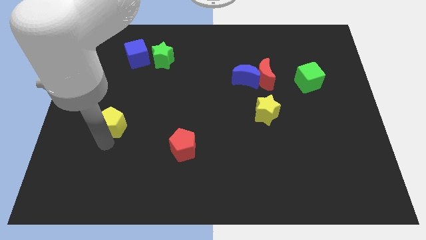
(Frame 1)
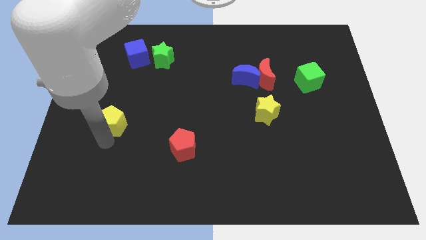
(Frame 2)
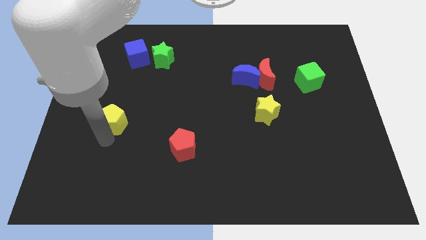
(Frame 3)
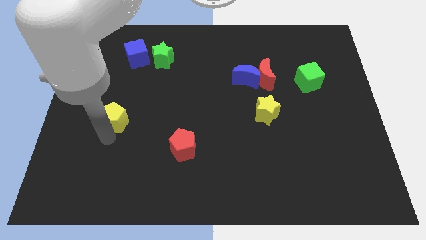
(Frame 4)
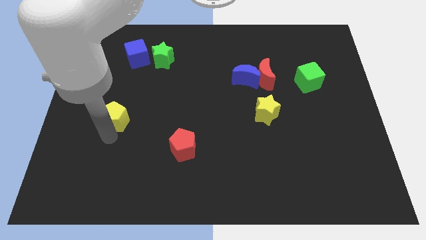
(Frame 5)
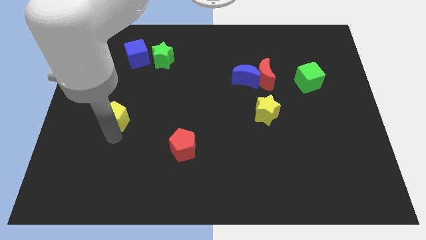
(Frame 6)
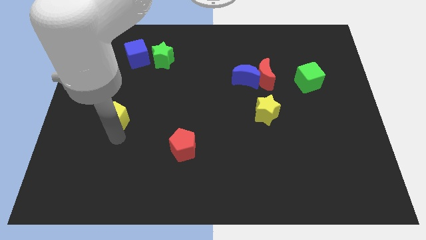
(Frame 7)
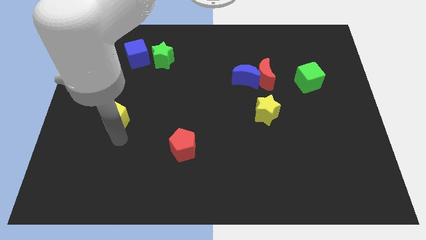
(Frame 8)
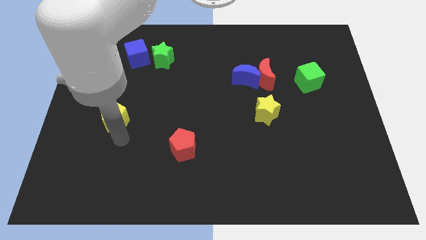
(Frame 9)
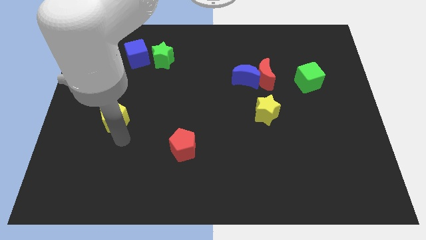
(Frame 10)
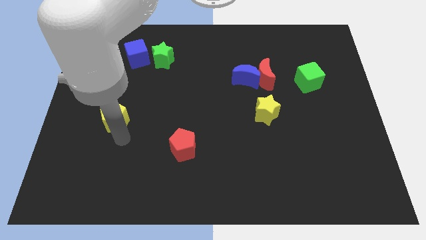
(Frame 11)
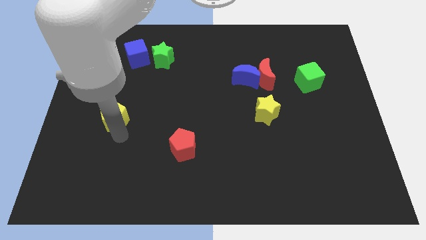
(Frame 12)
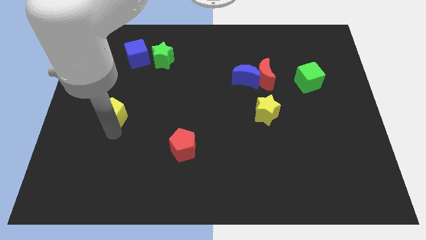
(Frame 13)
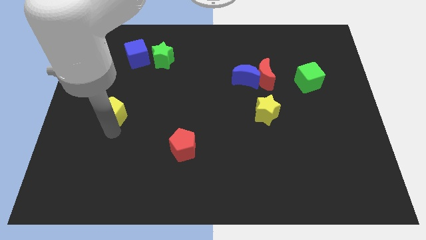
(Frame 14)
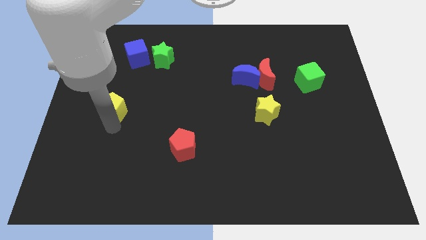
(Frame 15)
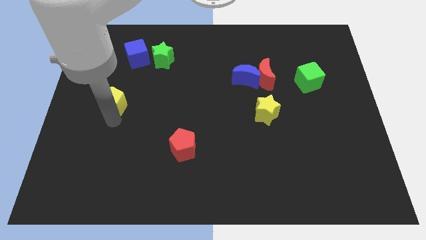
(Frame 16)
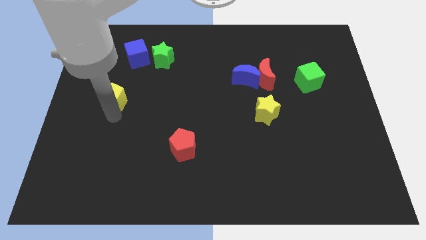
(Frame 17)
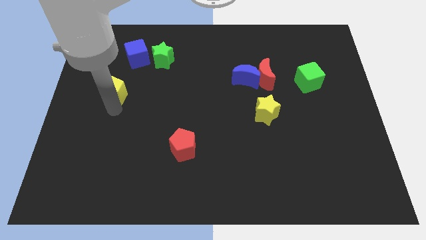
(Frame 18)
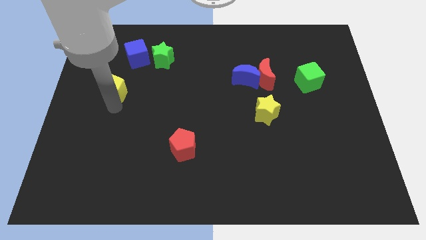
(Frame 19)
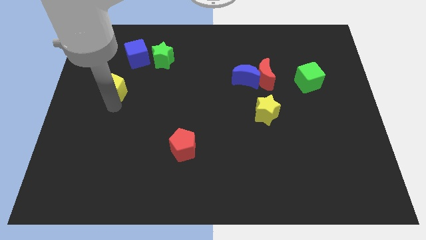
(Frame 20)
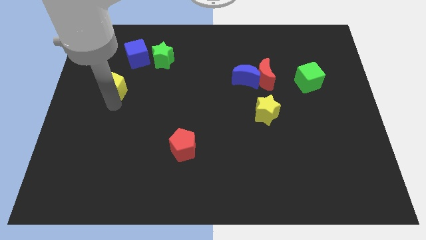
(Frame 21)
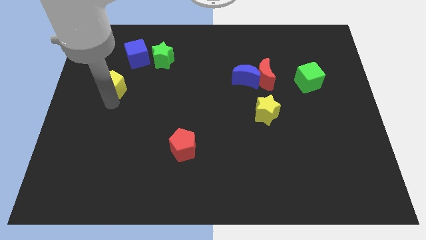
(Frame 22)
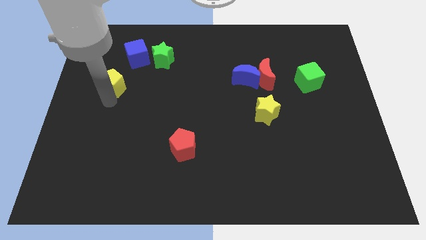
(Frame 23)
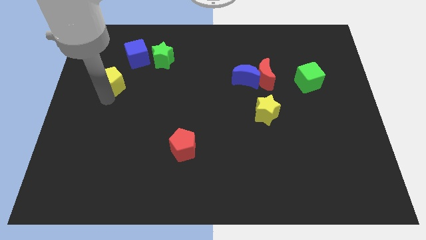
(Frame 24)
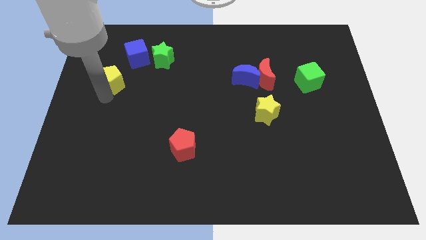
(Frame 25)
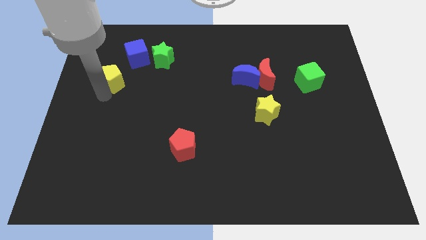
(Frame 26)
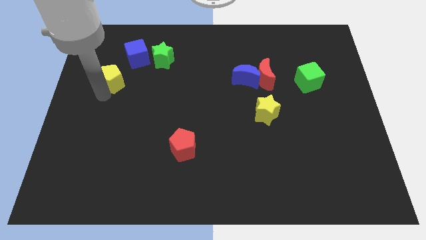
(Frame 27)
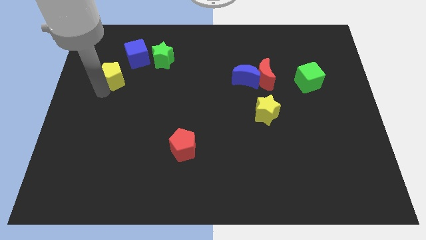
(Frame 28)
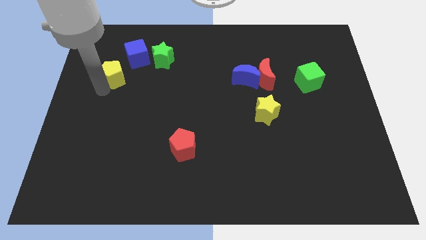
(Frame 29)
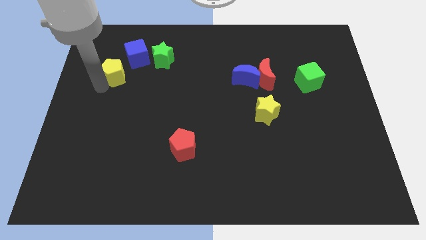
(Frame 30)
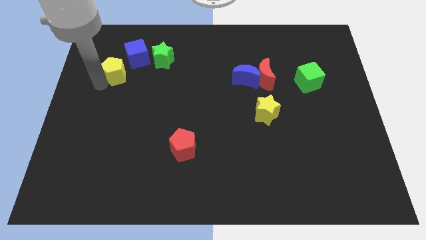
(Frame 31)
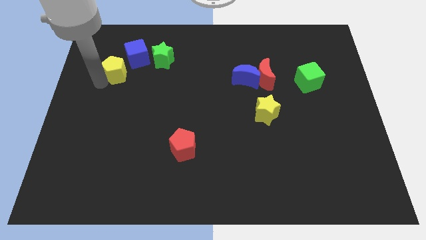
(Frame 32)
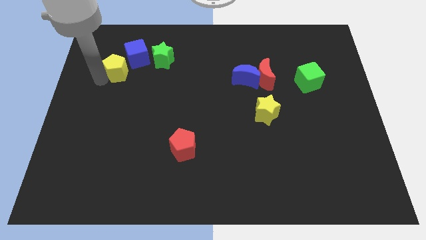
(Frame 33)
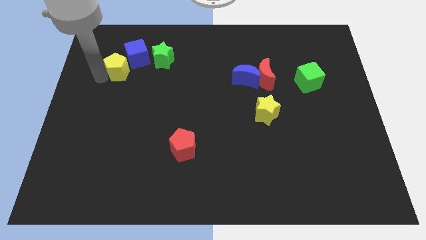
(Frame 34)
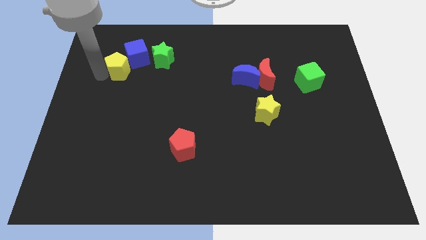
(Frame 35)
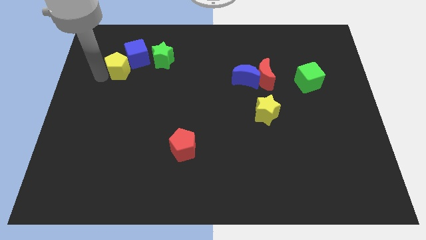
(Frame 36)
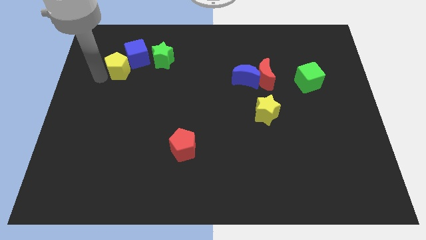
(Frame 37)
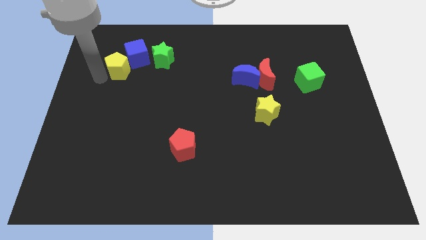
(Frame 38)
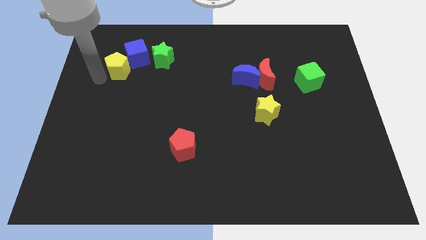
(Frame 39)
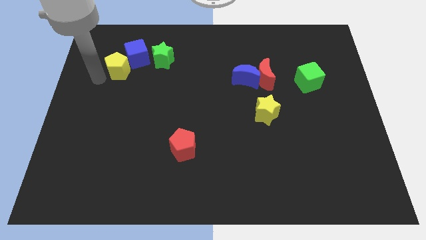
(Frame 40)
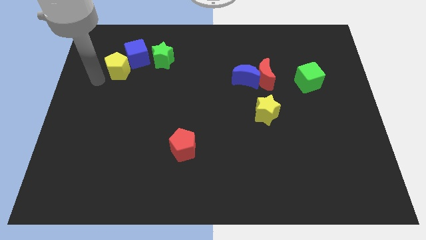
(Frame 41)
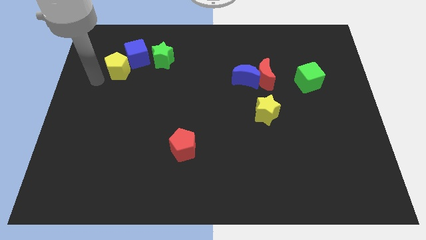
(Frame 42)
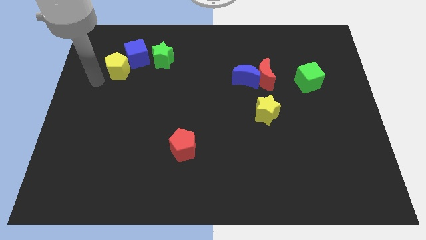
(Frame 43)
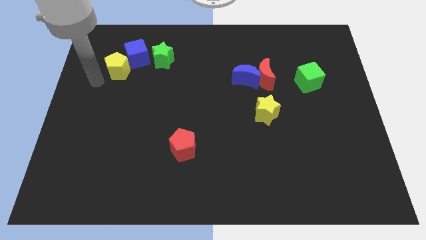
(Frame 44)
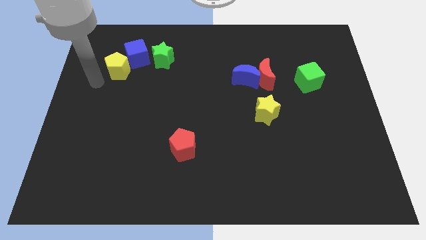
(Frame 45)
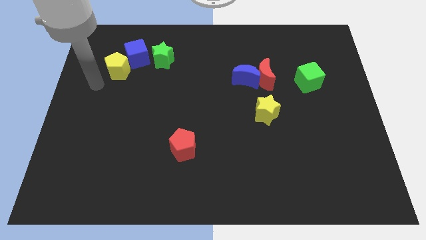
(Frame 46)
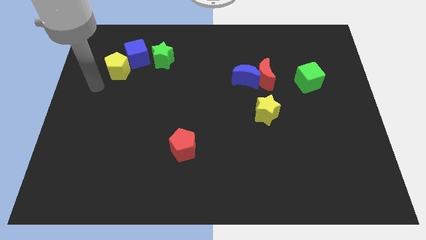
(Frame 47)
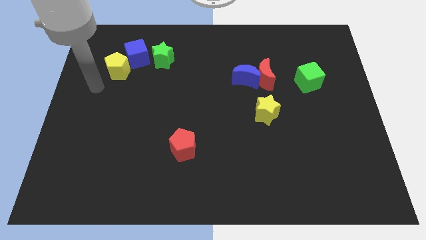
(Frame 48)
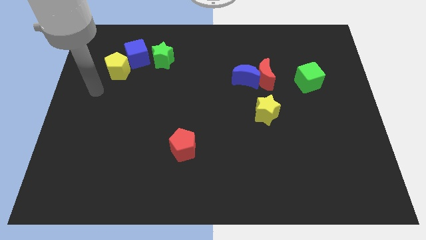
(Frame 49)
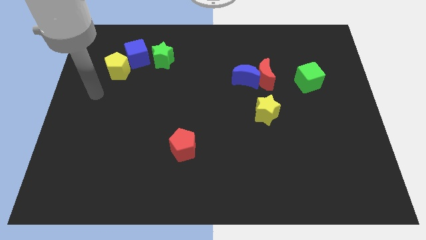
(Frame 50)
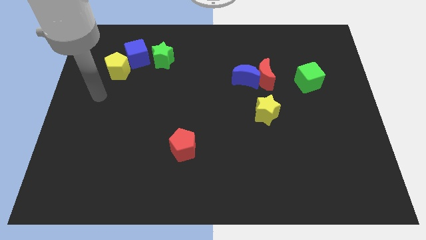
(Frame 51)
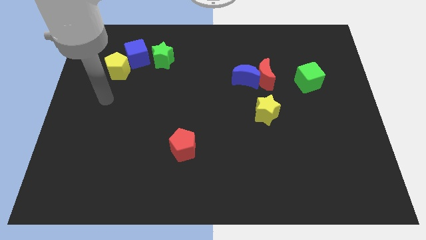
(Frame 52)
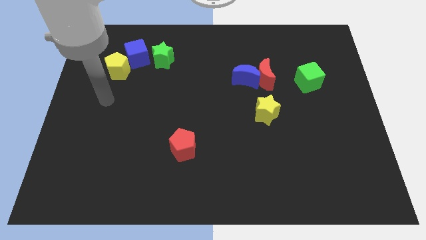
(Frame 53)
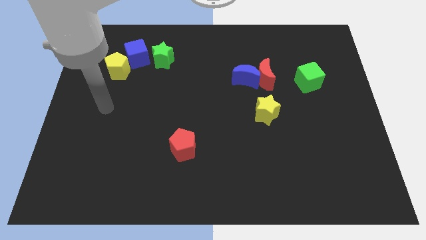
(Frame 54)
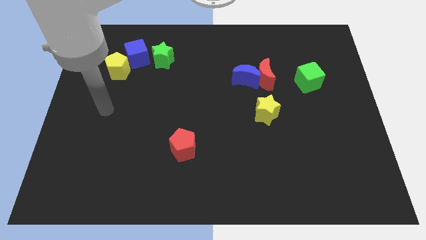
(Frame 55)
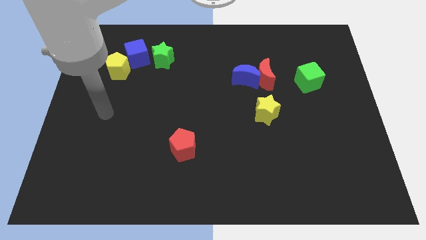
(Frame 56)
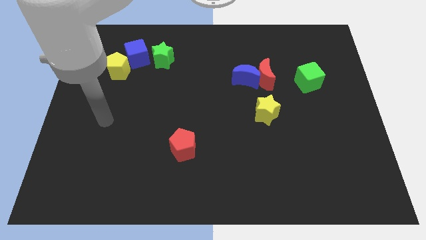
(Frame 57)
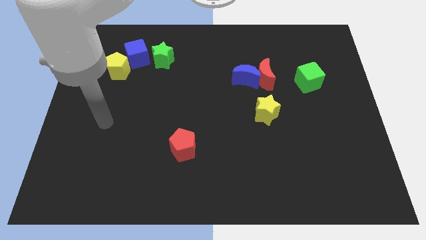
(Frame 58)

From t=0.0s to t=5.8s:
move the yellow pentagon to the left bottom of the blue cube

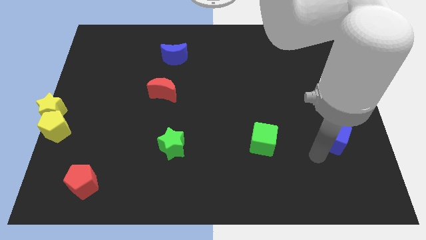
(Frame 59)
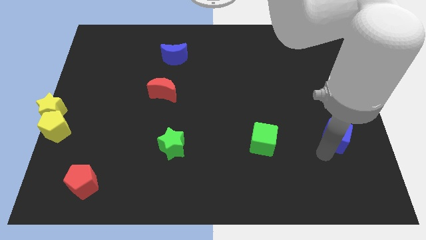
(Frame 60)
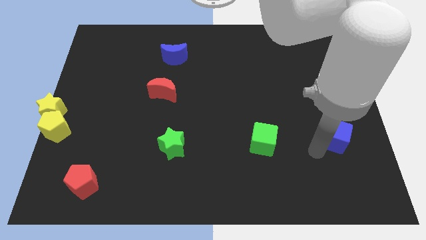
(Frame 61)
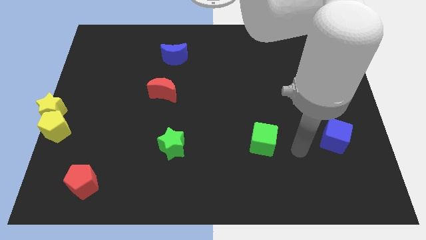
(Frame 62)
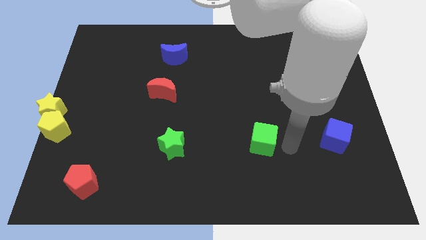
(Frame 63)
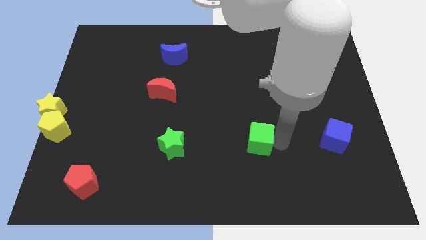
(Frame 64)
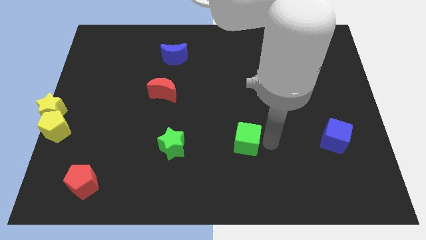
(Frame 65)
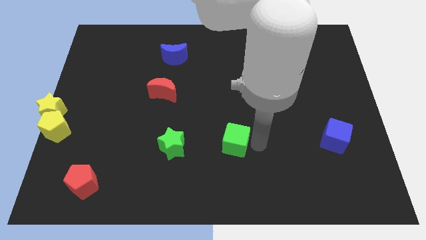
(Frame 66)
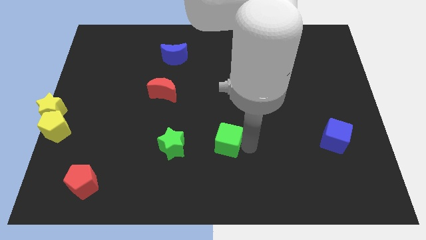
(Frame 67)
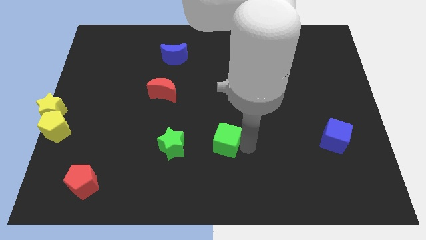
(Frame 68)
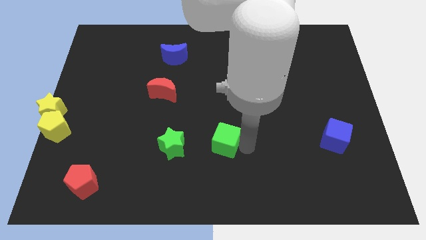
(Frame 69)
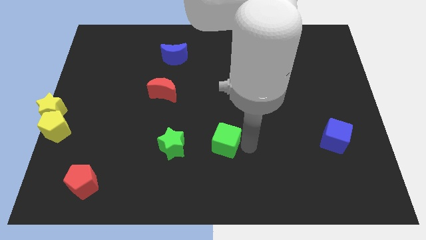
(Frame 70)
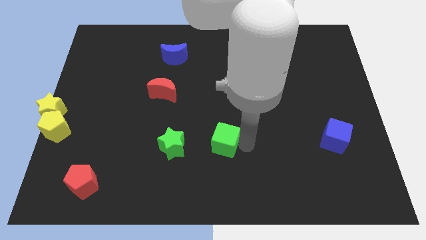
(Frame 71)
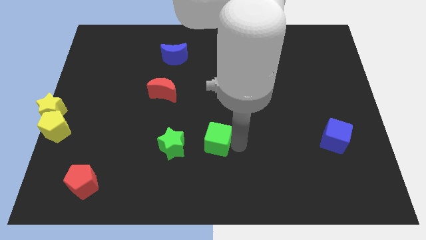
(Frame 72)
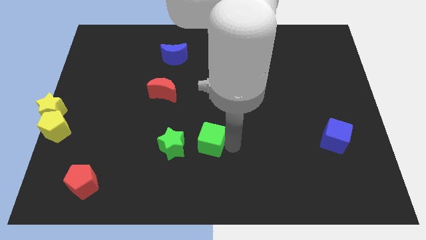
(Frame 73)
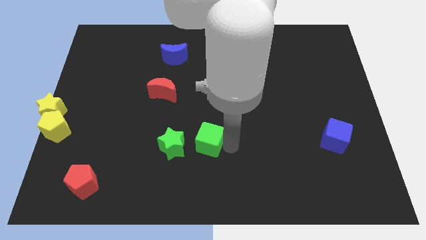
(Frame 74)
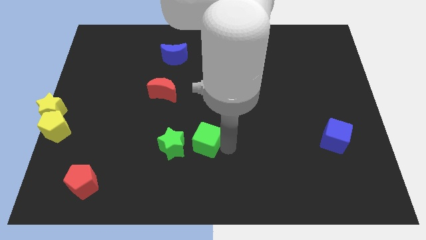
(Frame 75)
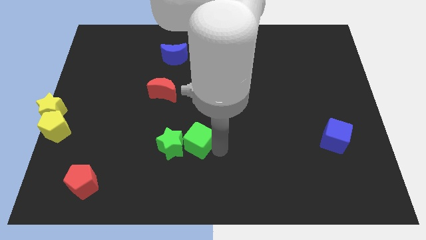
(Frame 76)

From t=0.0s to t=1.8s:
move the green cube into the green star

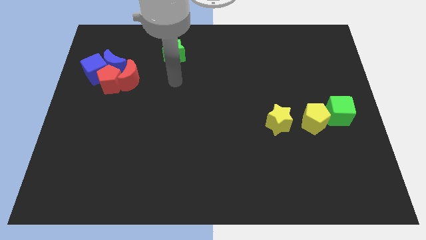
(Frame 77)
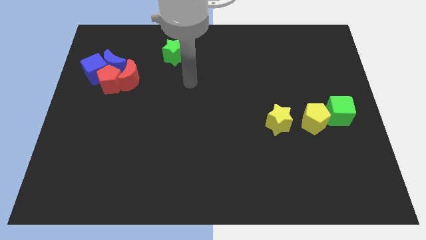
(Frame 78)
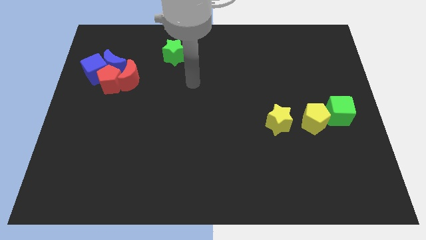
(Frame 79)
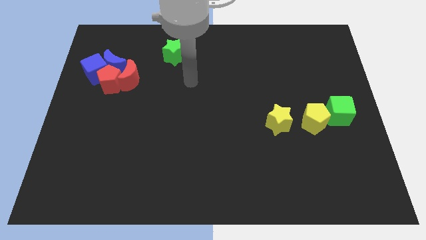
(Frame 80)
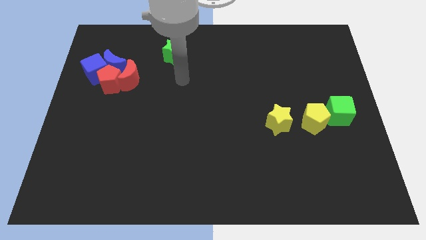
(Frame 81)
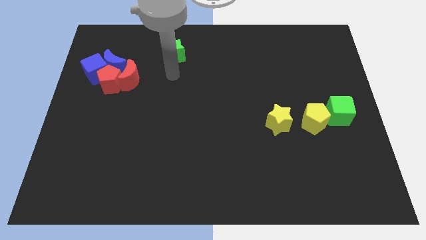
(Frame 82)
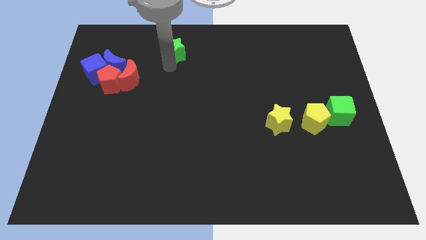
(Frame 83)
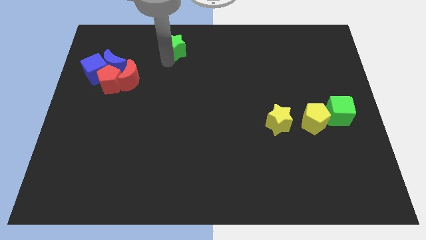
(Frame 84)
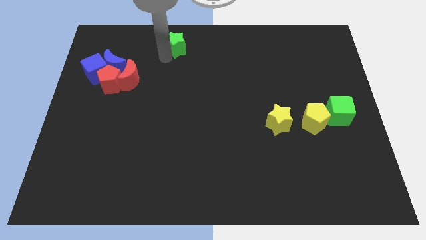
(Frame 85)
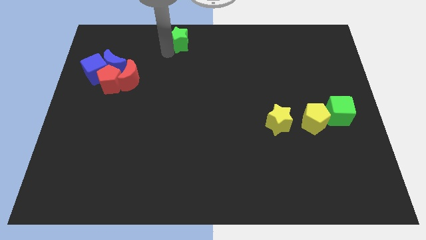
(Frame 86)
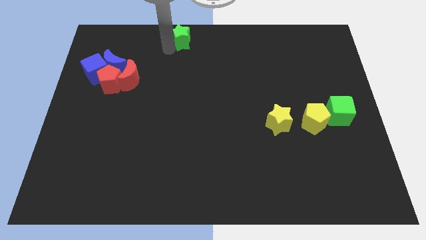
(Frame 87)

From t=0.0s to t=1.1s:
slightly push green star upwards

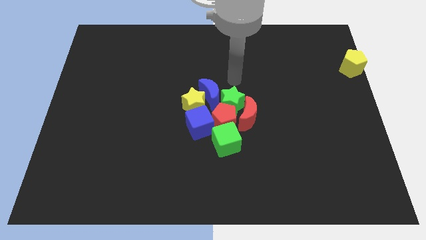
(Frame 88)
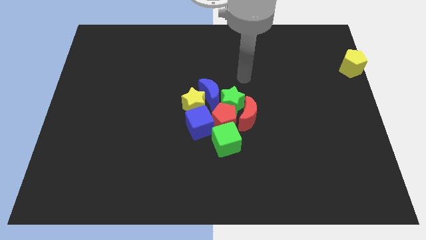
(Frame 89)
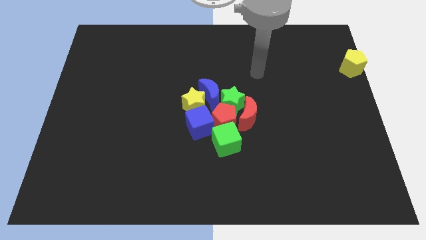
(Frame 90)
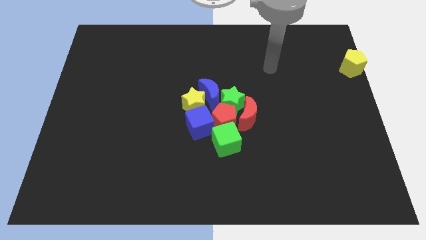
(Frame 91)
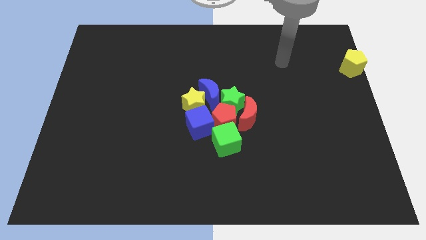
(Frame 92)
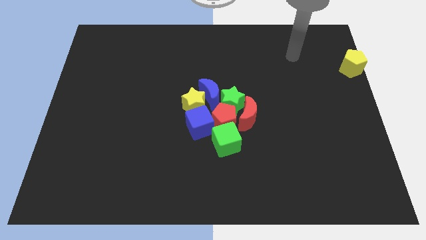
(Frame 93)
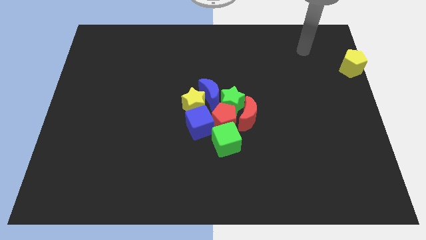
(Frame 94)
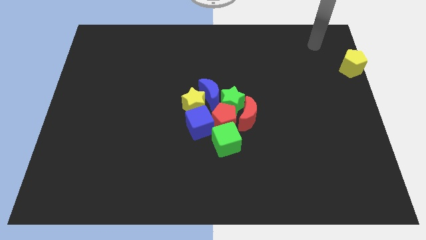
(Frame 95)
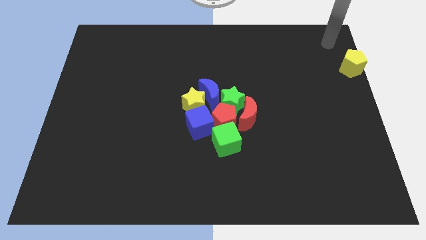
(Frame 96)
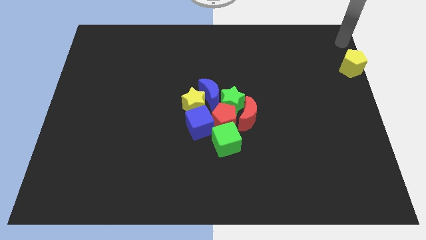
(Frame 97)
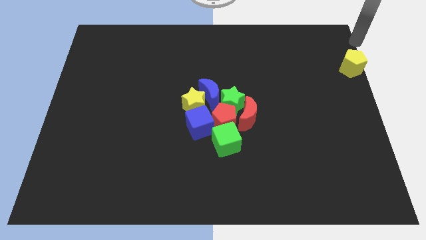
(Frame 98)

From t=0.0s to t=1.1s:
move the arm from the center to top right corner
